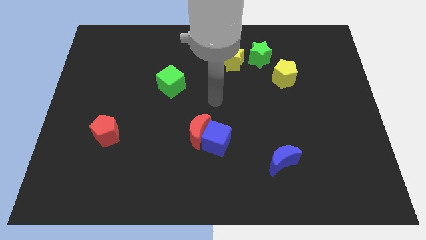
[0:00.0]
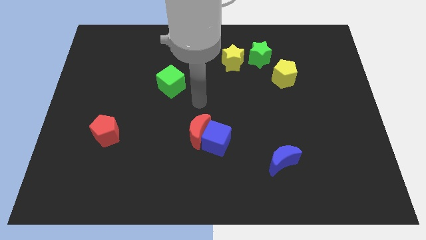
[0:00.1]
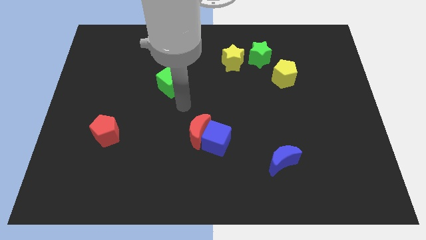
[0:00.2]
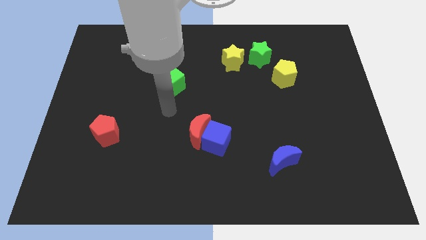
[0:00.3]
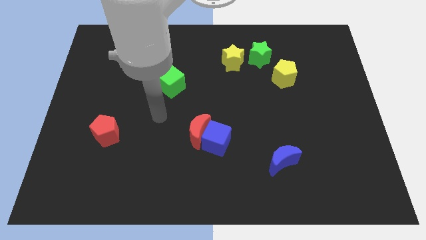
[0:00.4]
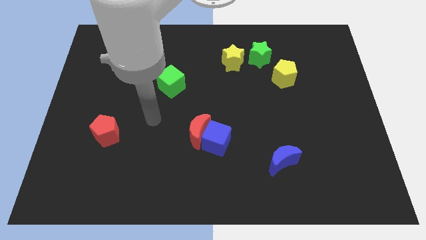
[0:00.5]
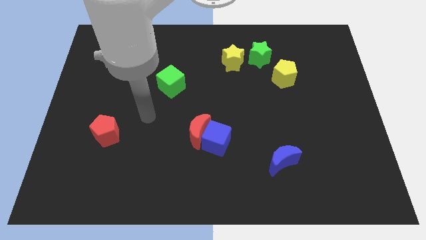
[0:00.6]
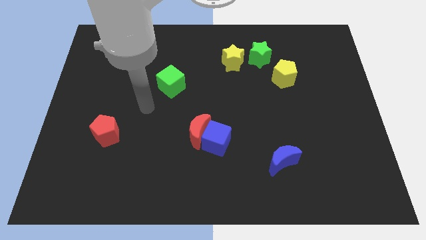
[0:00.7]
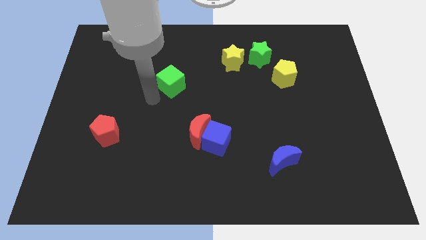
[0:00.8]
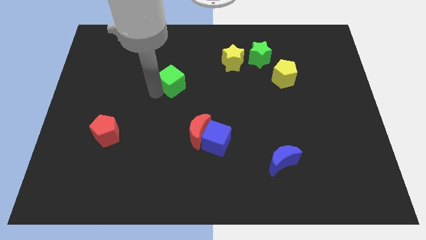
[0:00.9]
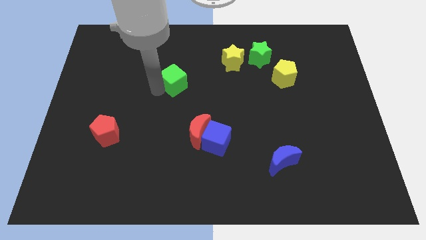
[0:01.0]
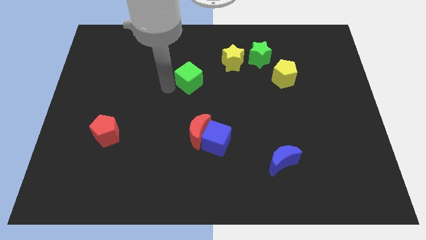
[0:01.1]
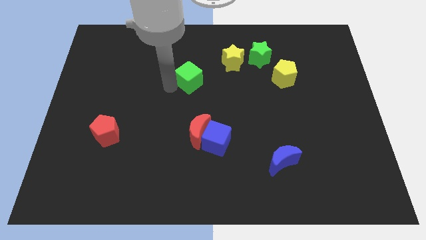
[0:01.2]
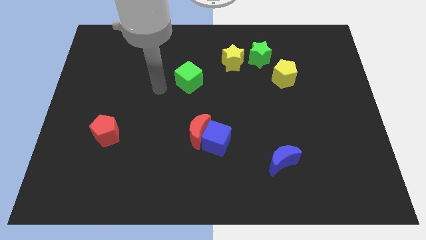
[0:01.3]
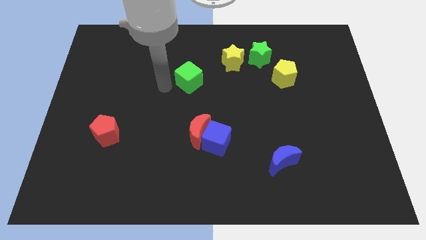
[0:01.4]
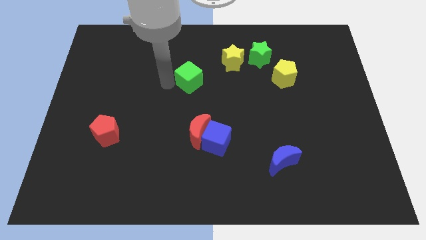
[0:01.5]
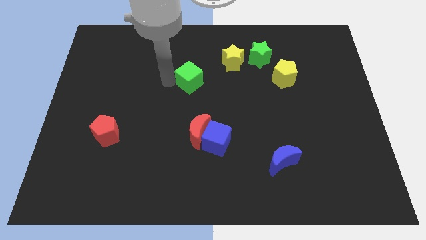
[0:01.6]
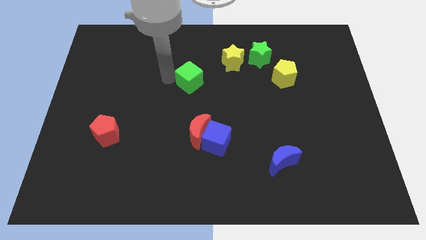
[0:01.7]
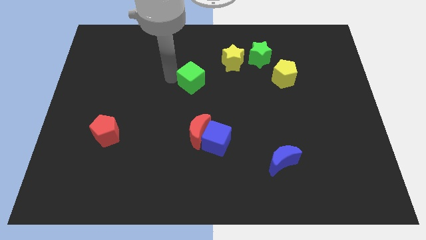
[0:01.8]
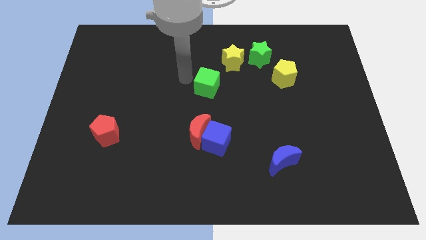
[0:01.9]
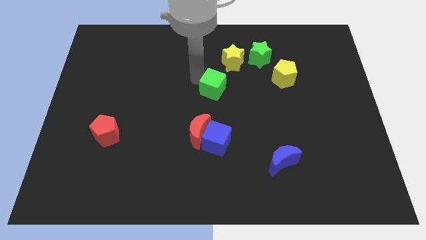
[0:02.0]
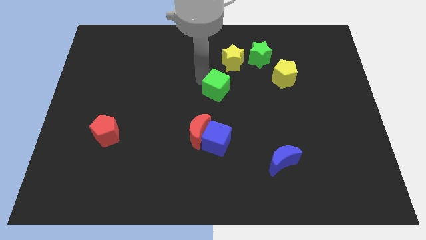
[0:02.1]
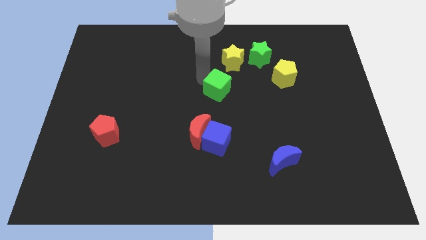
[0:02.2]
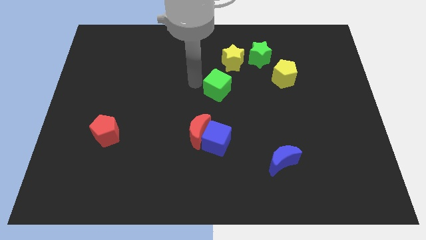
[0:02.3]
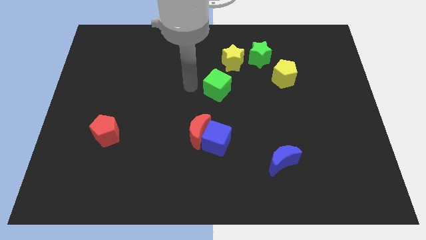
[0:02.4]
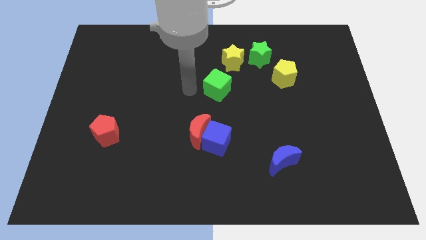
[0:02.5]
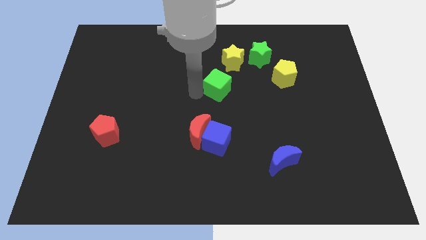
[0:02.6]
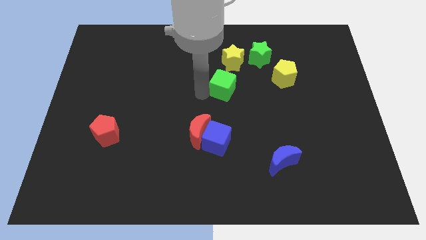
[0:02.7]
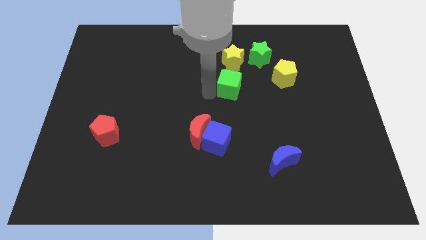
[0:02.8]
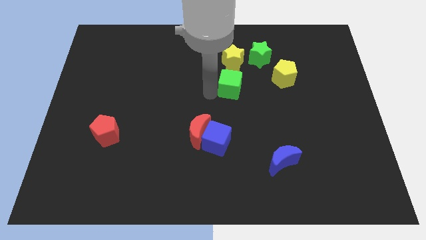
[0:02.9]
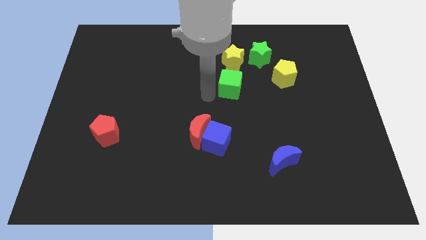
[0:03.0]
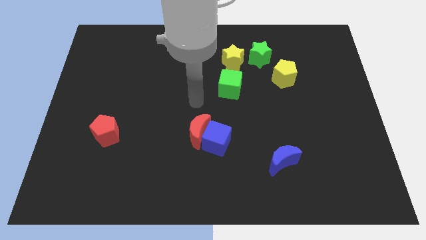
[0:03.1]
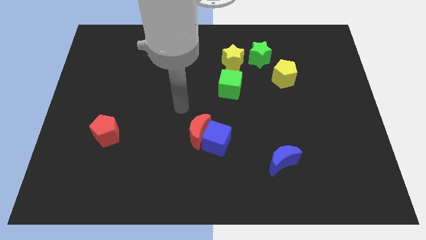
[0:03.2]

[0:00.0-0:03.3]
move the green cube to the bottom of the yellow star

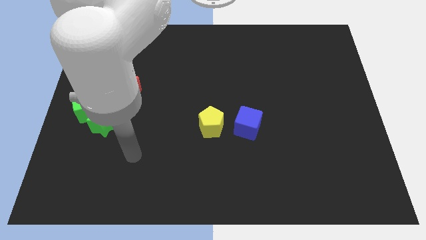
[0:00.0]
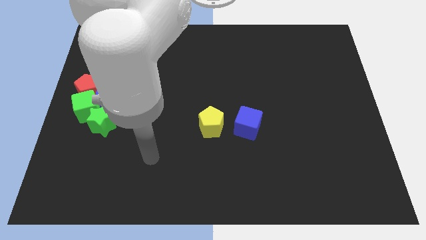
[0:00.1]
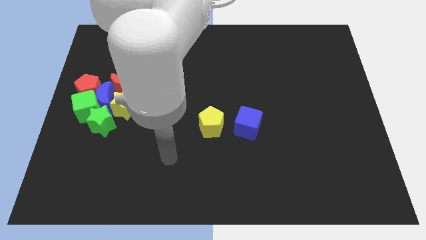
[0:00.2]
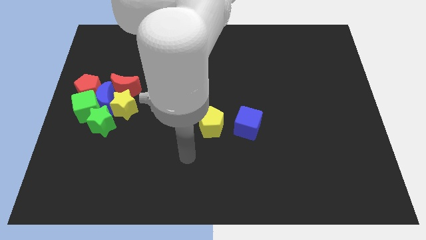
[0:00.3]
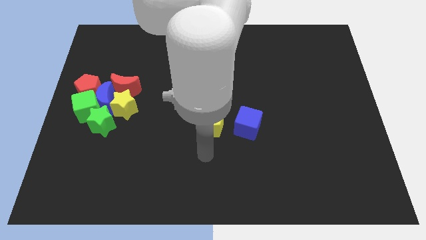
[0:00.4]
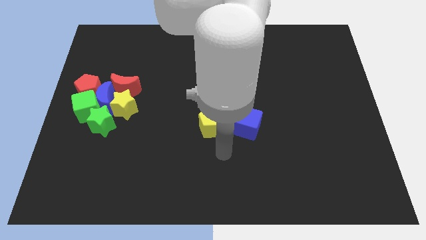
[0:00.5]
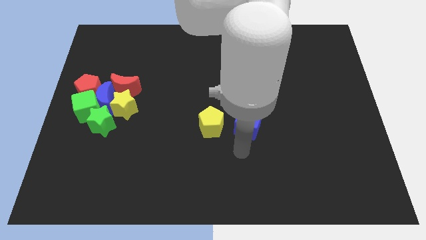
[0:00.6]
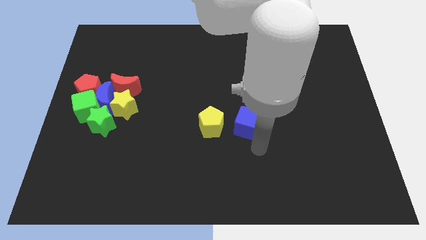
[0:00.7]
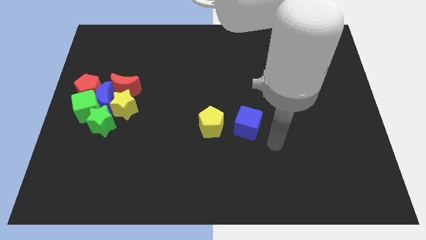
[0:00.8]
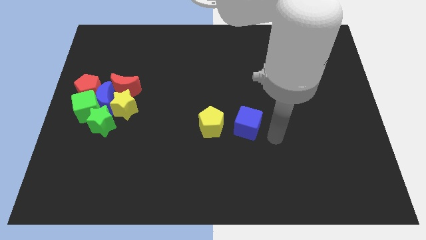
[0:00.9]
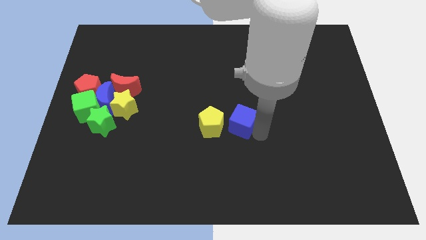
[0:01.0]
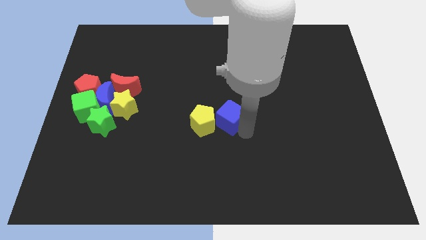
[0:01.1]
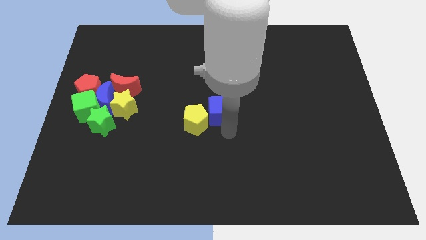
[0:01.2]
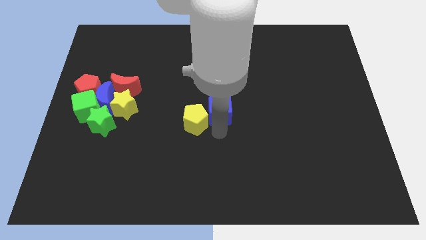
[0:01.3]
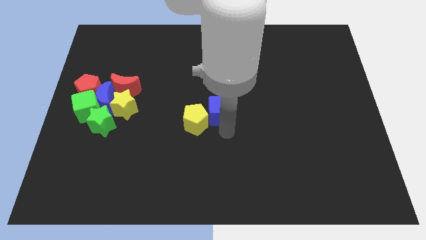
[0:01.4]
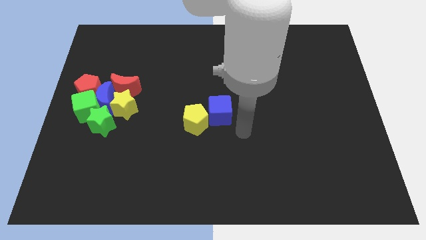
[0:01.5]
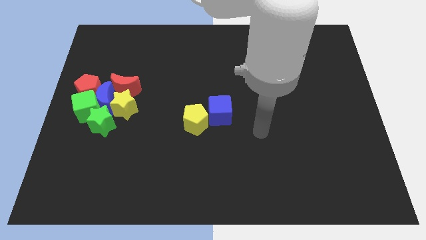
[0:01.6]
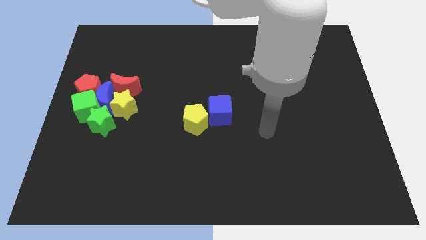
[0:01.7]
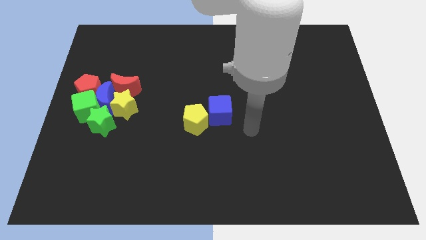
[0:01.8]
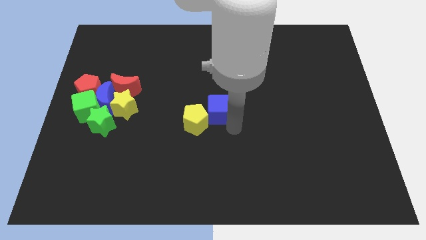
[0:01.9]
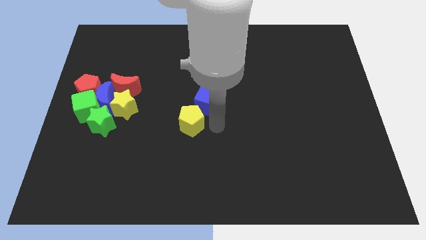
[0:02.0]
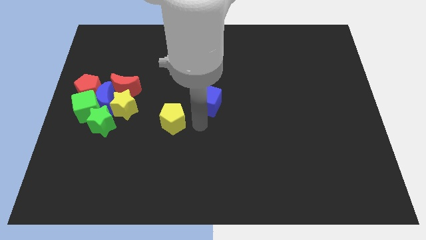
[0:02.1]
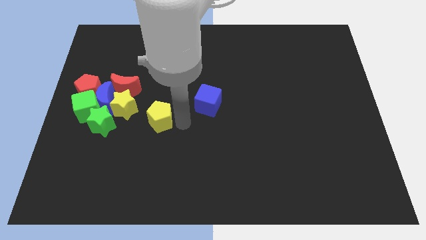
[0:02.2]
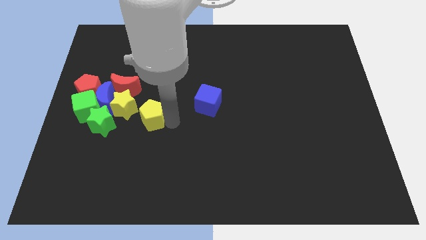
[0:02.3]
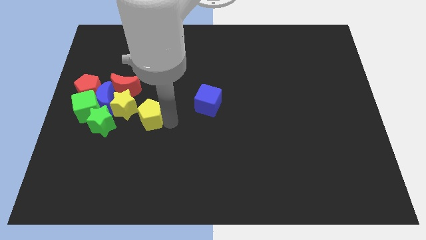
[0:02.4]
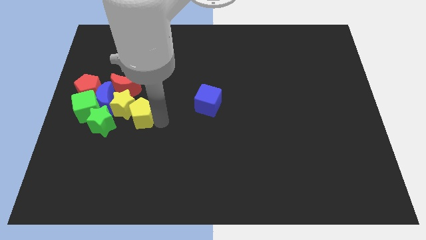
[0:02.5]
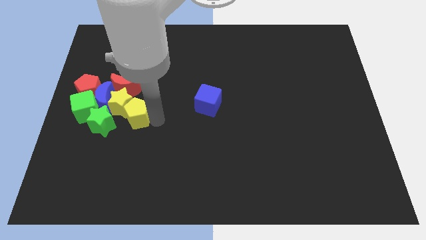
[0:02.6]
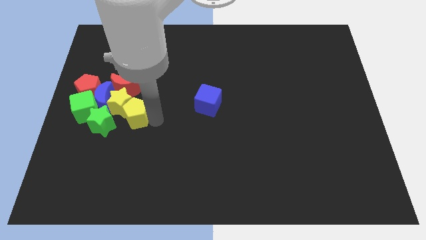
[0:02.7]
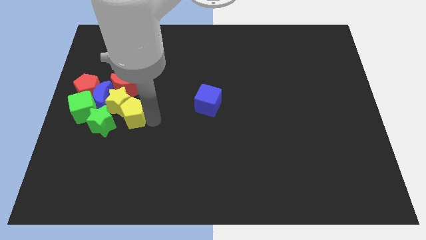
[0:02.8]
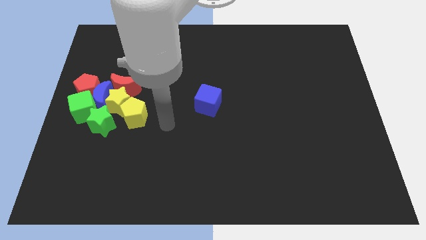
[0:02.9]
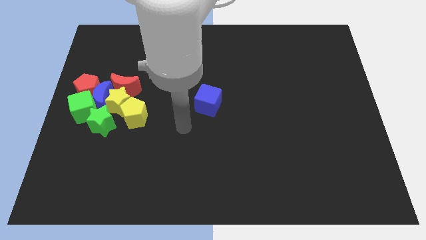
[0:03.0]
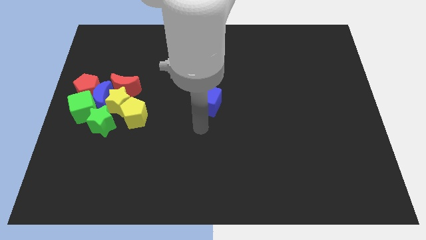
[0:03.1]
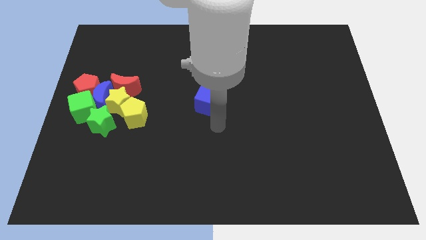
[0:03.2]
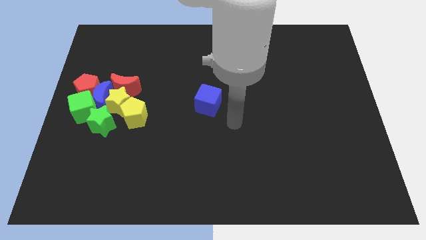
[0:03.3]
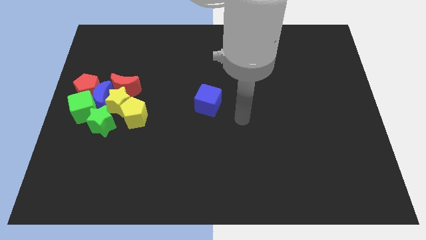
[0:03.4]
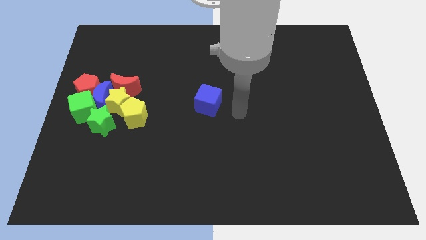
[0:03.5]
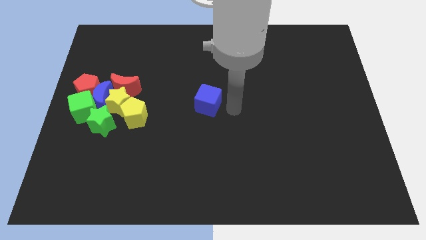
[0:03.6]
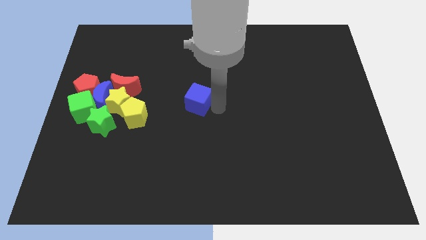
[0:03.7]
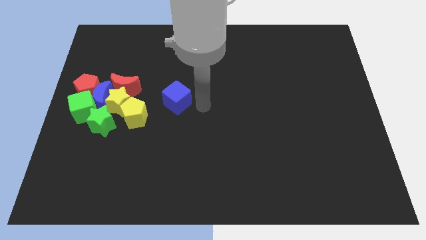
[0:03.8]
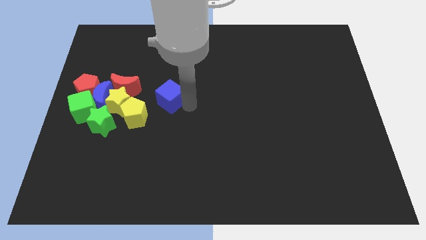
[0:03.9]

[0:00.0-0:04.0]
separate the yellow pentagon and the blue cube

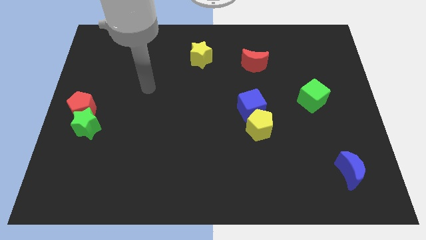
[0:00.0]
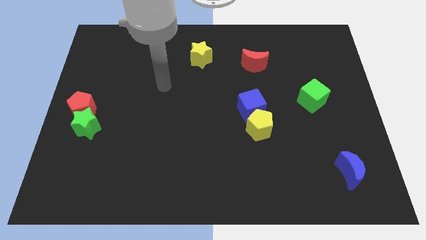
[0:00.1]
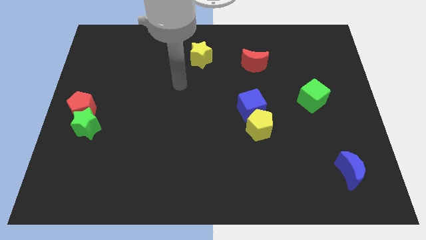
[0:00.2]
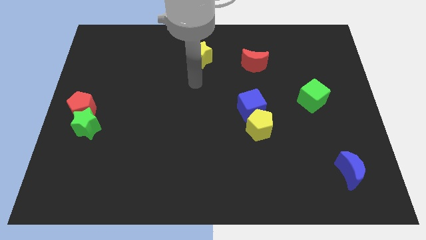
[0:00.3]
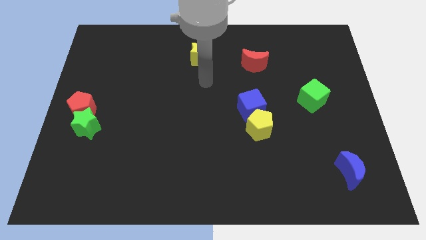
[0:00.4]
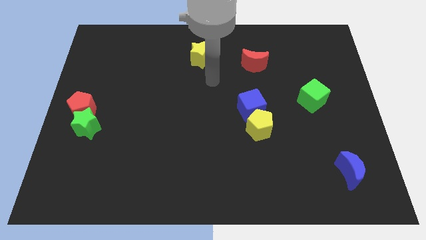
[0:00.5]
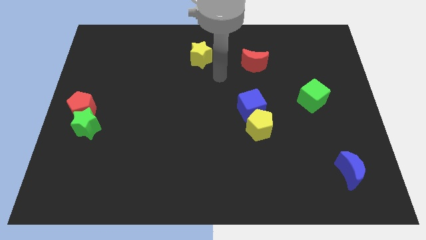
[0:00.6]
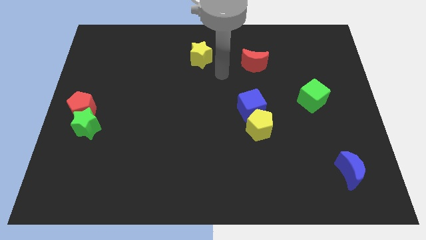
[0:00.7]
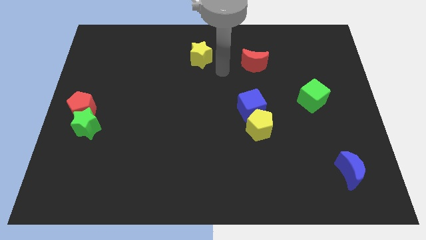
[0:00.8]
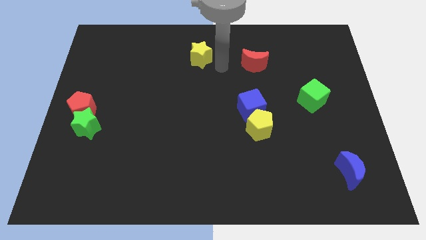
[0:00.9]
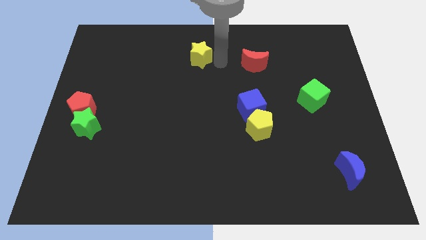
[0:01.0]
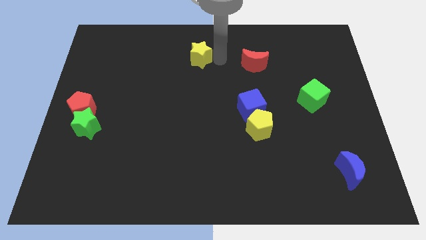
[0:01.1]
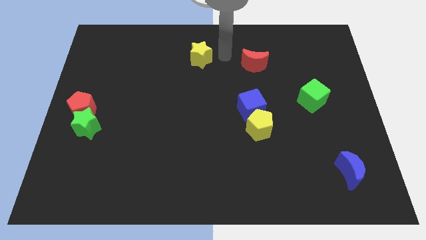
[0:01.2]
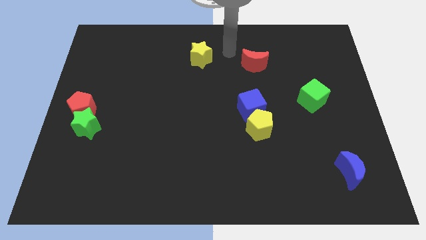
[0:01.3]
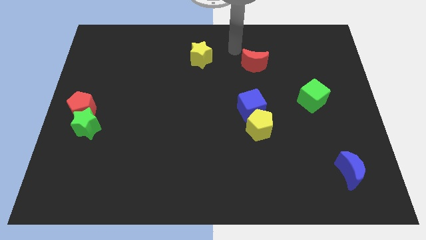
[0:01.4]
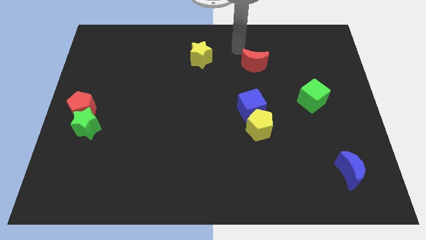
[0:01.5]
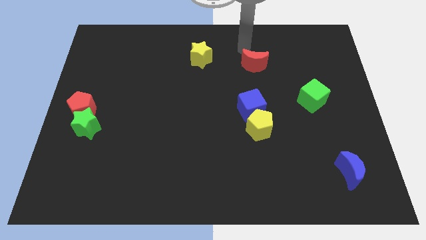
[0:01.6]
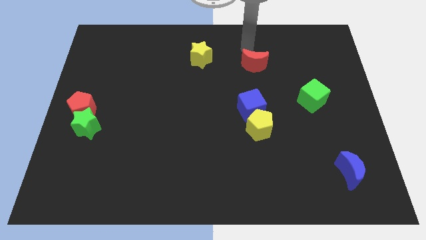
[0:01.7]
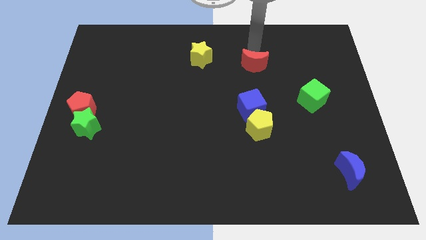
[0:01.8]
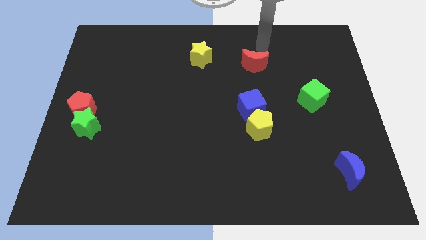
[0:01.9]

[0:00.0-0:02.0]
point above the red moon
